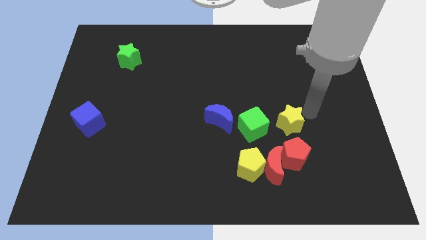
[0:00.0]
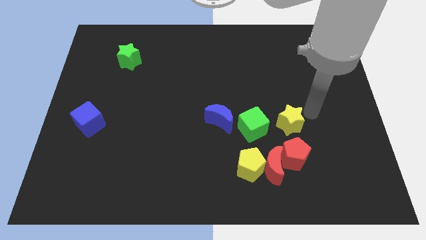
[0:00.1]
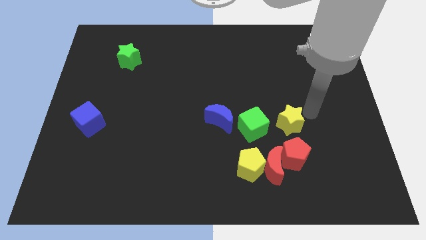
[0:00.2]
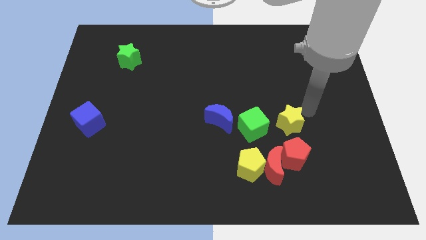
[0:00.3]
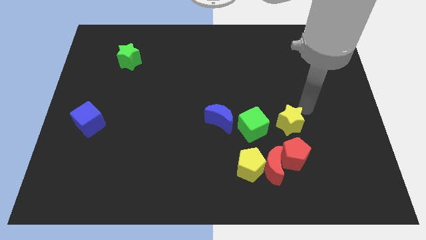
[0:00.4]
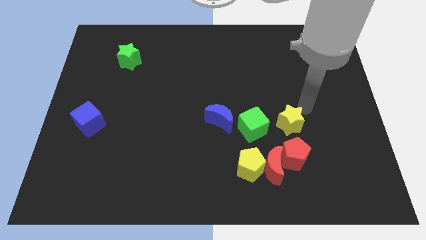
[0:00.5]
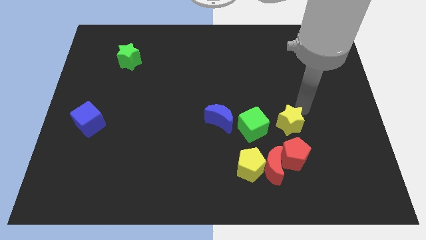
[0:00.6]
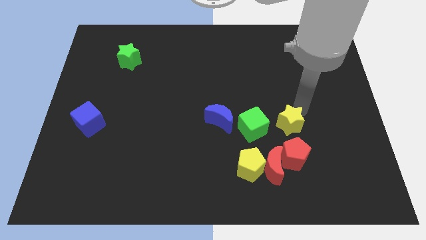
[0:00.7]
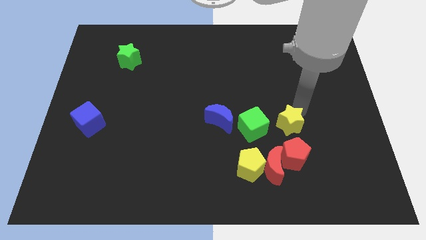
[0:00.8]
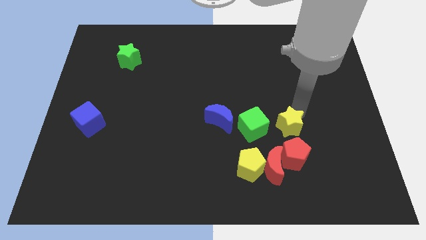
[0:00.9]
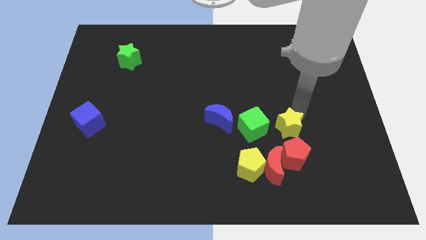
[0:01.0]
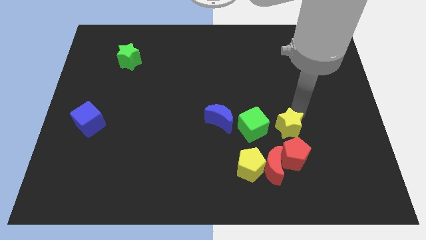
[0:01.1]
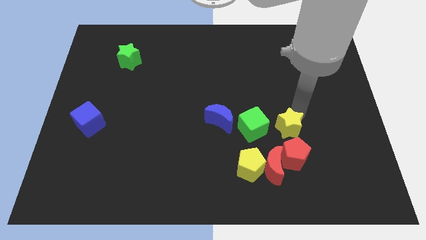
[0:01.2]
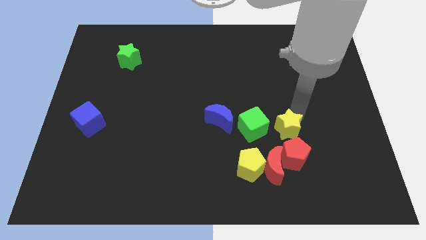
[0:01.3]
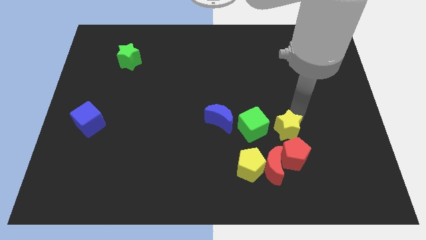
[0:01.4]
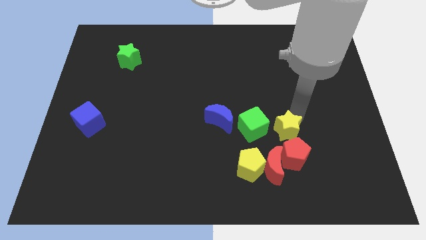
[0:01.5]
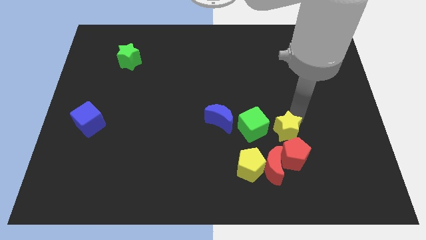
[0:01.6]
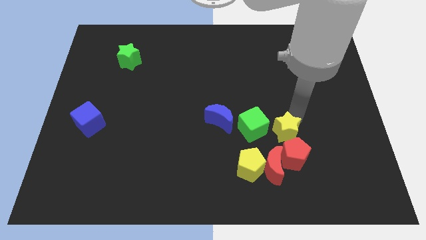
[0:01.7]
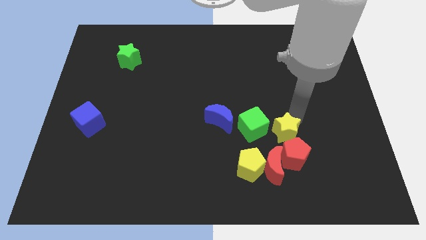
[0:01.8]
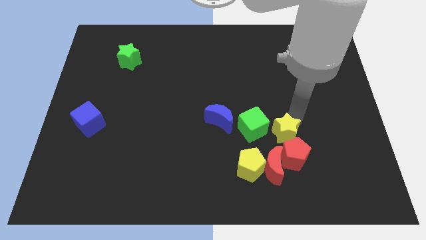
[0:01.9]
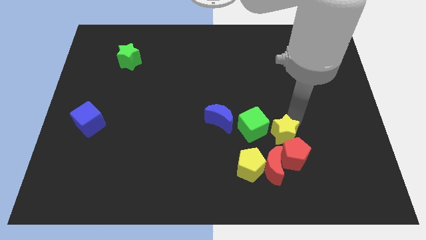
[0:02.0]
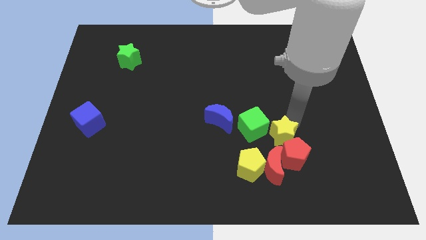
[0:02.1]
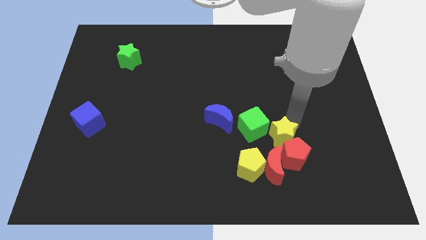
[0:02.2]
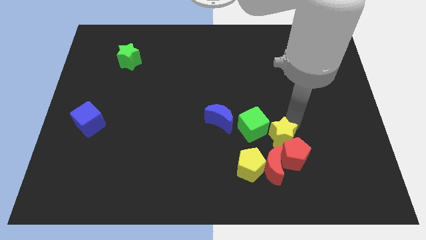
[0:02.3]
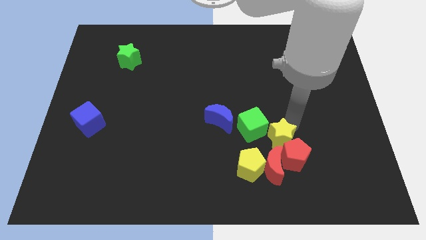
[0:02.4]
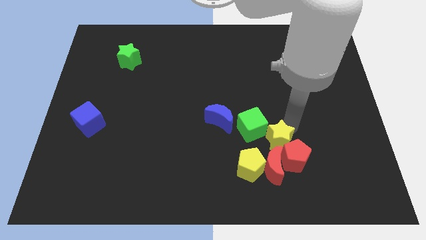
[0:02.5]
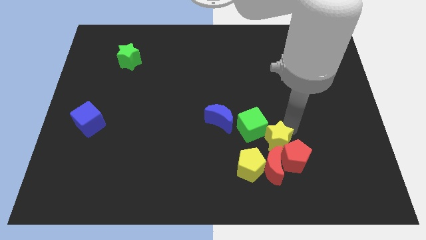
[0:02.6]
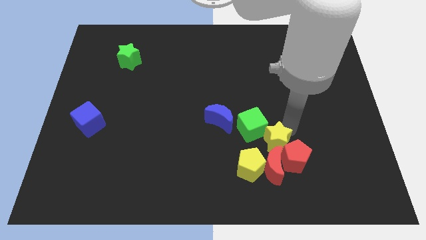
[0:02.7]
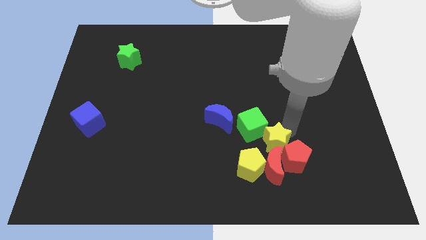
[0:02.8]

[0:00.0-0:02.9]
push the yellow star into the red crescent

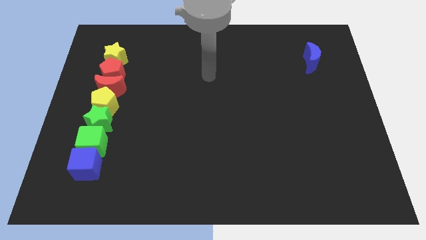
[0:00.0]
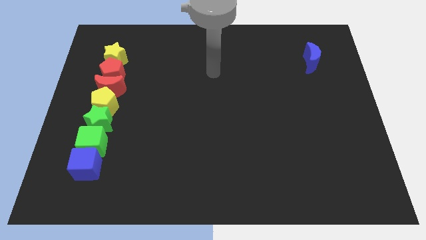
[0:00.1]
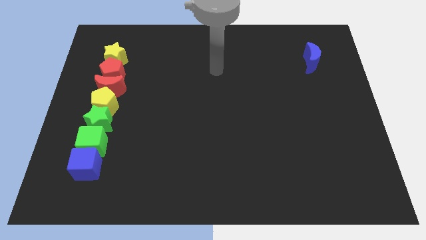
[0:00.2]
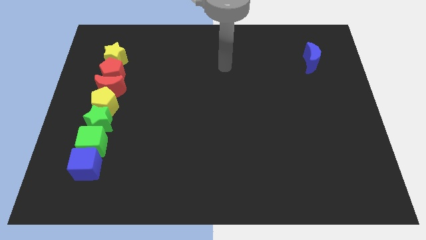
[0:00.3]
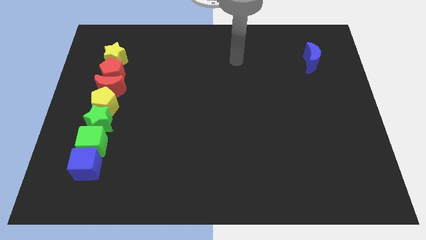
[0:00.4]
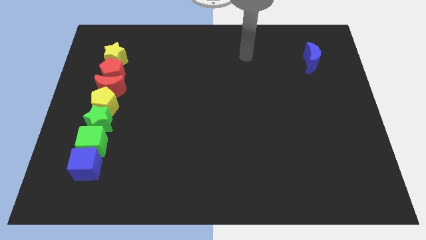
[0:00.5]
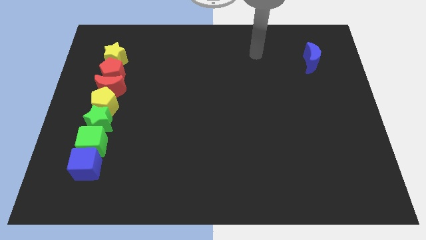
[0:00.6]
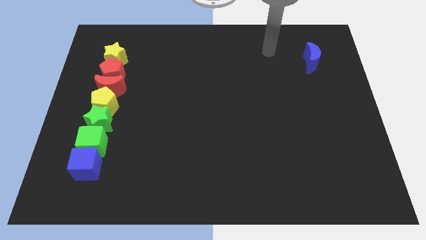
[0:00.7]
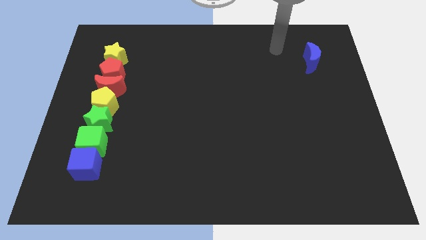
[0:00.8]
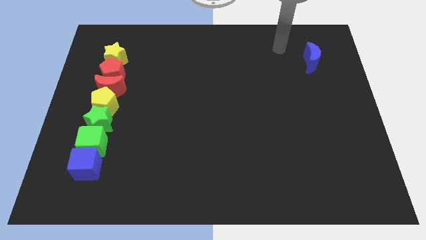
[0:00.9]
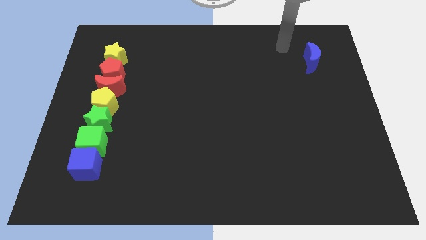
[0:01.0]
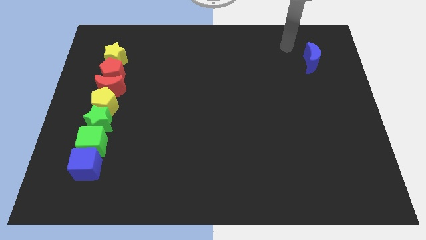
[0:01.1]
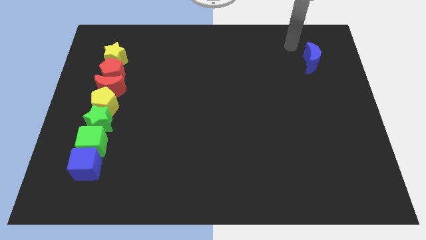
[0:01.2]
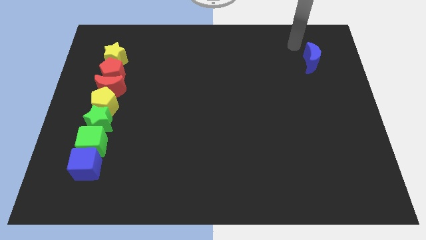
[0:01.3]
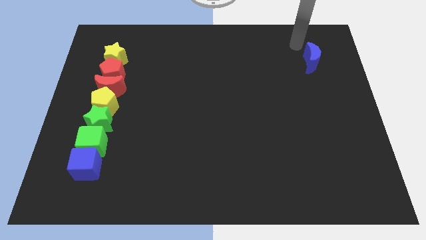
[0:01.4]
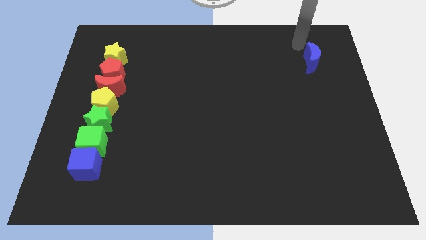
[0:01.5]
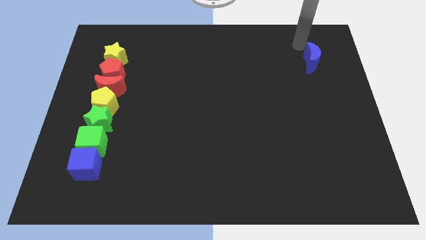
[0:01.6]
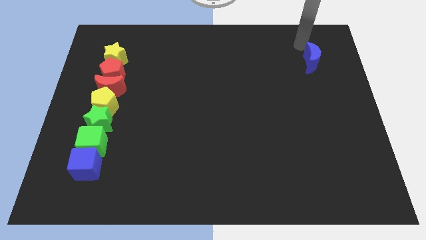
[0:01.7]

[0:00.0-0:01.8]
go and place your hand close to the blue crescent

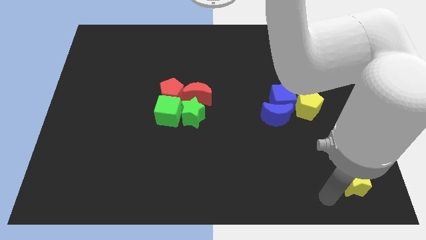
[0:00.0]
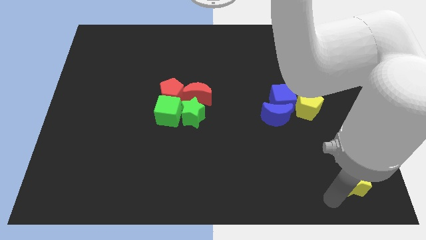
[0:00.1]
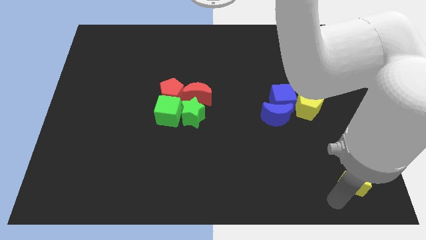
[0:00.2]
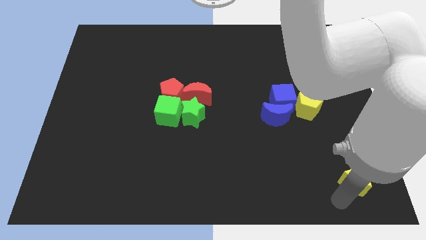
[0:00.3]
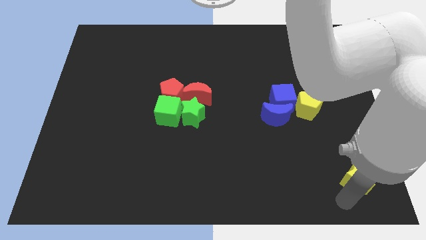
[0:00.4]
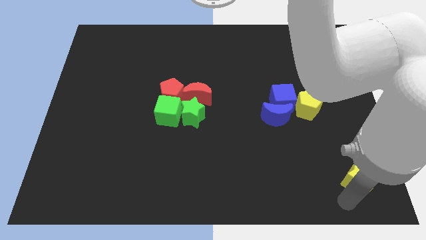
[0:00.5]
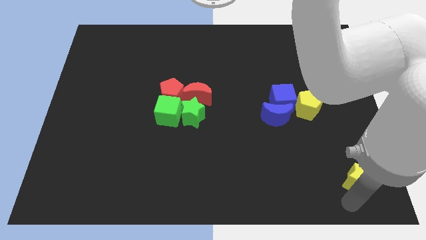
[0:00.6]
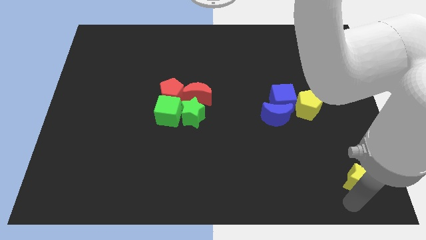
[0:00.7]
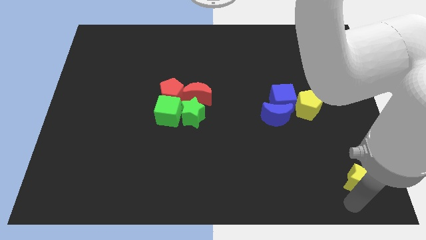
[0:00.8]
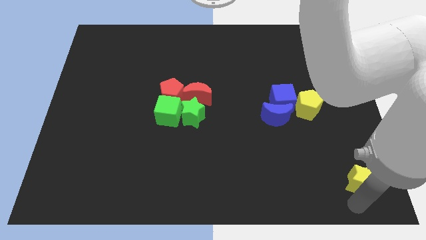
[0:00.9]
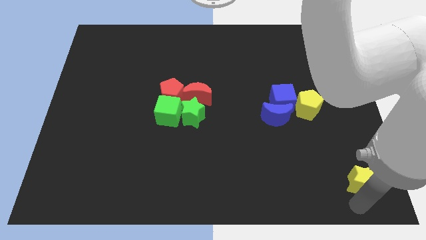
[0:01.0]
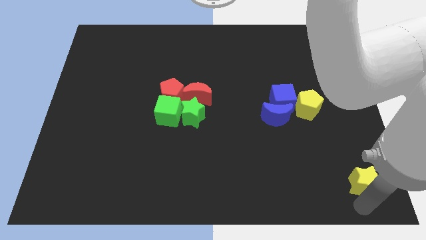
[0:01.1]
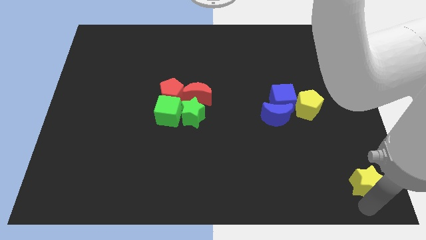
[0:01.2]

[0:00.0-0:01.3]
move yellow star slightly

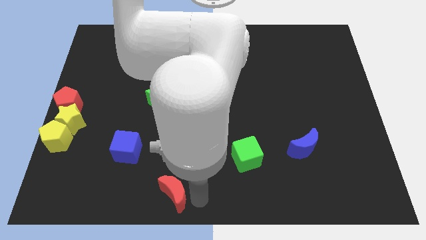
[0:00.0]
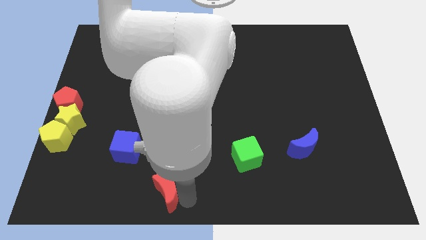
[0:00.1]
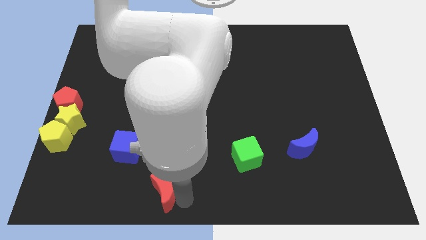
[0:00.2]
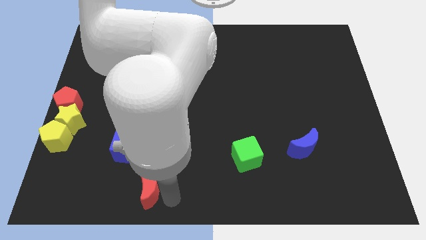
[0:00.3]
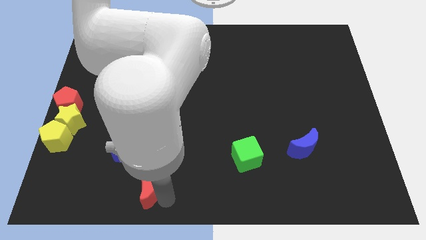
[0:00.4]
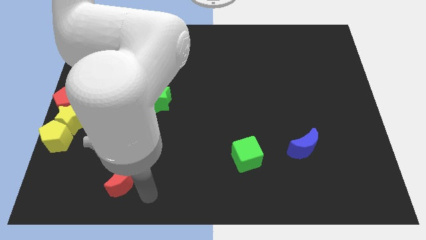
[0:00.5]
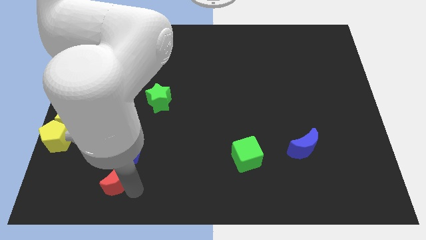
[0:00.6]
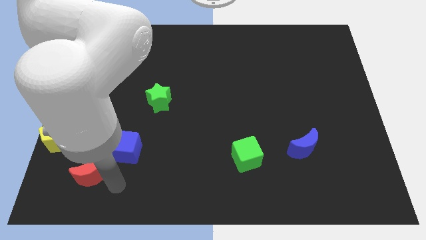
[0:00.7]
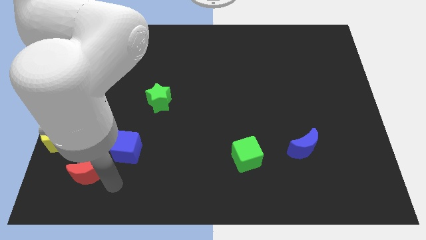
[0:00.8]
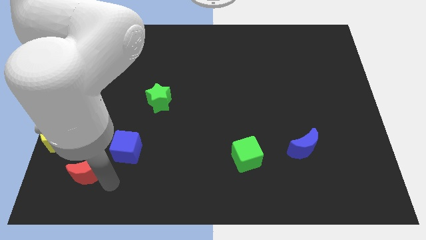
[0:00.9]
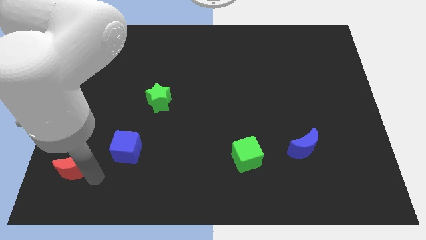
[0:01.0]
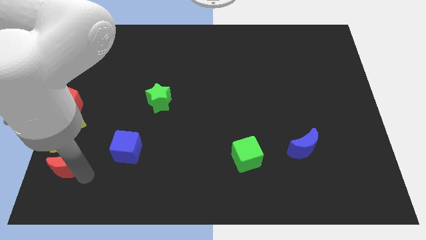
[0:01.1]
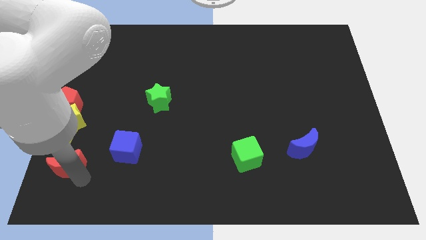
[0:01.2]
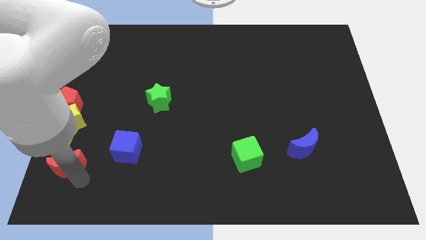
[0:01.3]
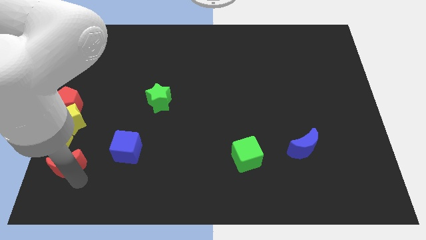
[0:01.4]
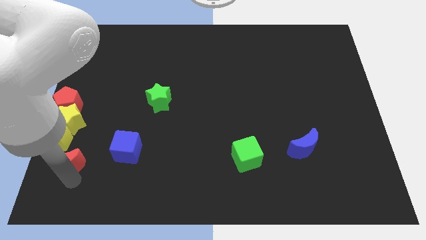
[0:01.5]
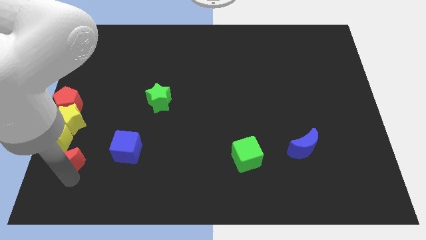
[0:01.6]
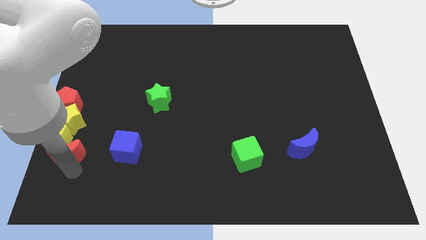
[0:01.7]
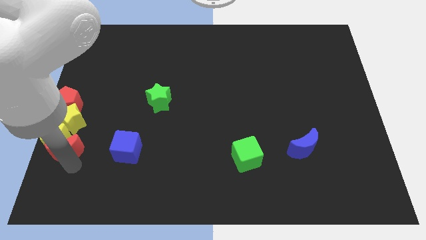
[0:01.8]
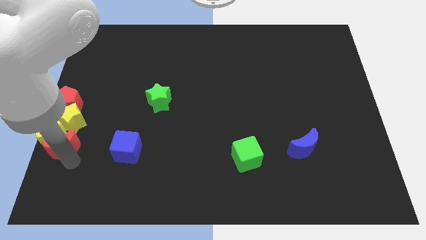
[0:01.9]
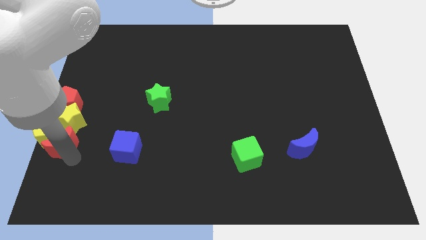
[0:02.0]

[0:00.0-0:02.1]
push red moon into yellow pentagon

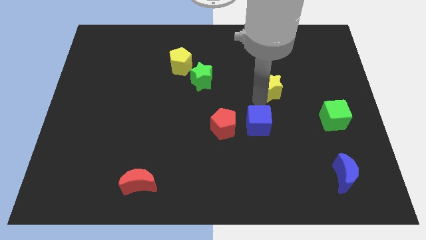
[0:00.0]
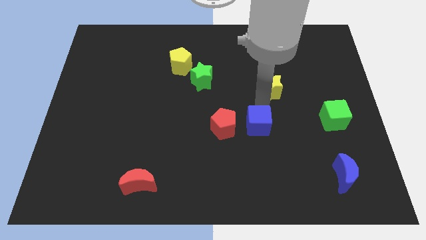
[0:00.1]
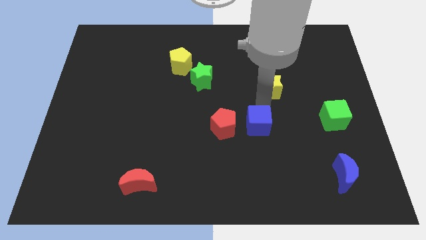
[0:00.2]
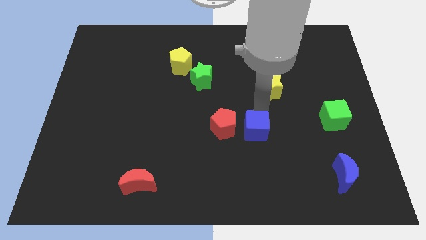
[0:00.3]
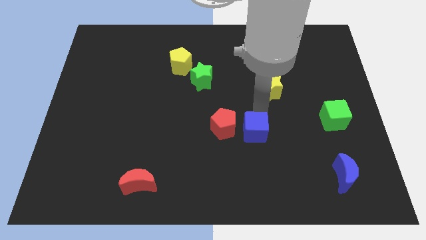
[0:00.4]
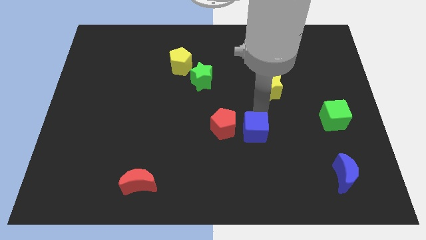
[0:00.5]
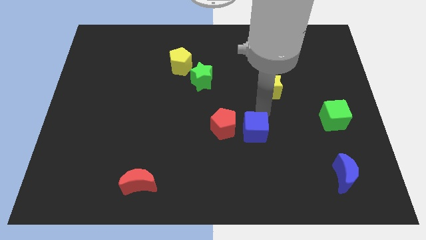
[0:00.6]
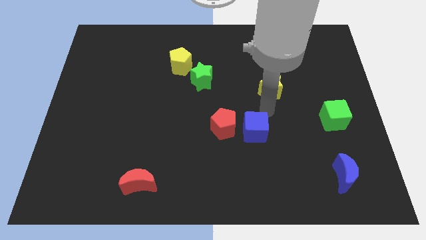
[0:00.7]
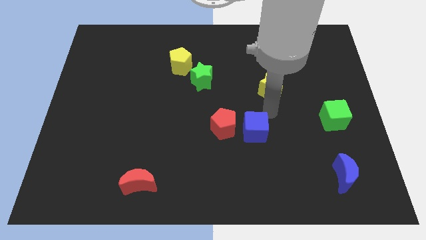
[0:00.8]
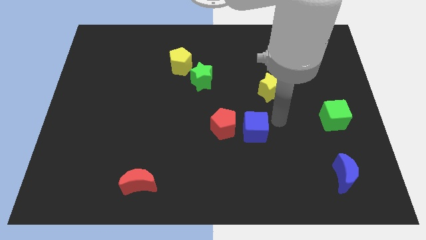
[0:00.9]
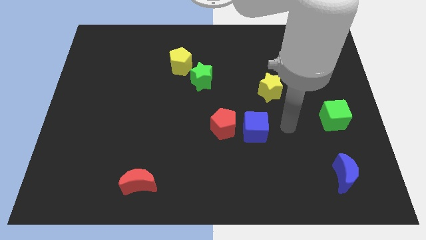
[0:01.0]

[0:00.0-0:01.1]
slightly move the blue cube to the down
